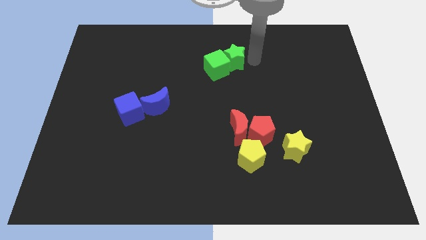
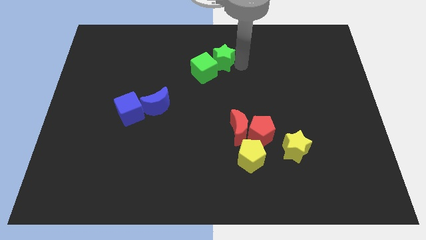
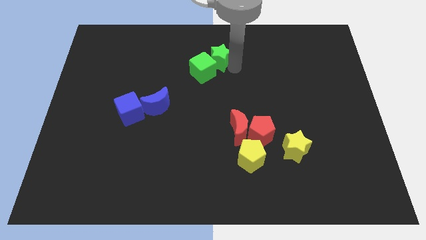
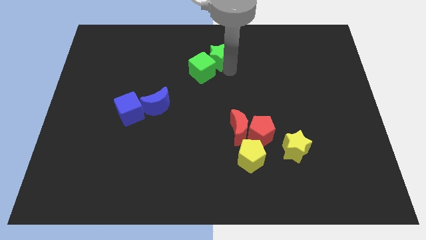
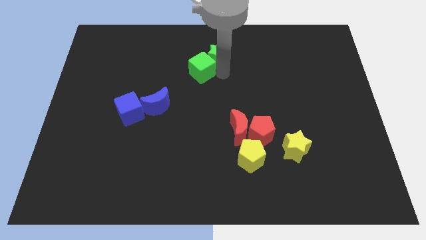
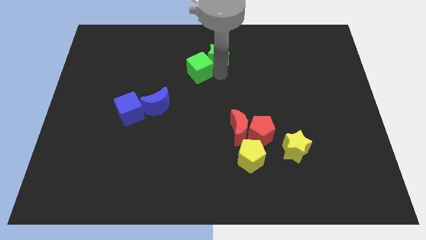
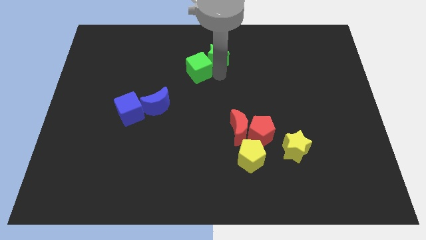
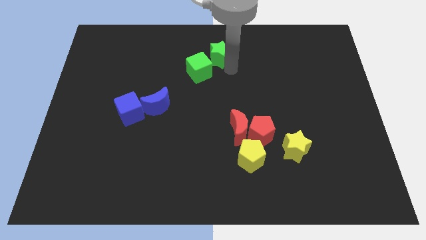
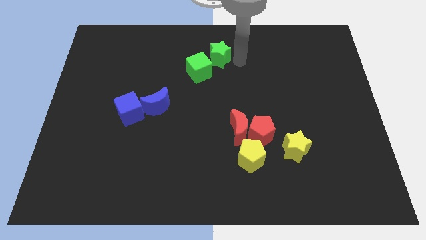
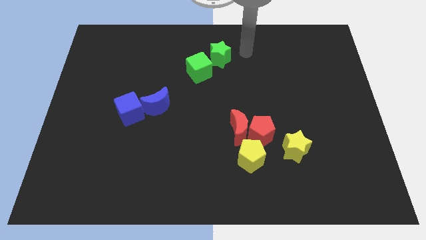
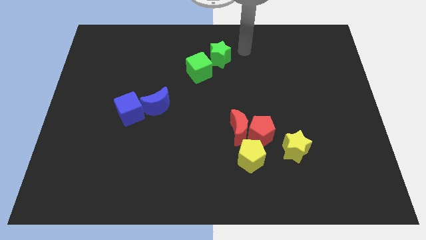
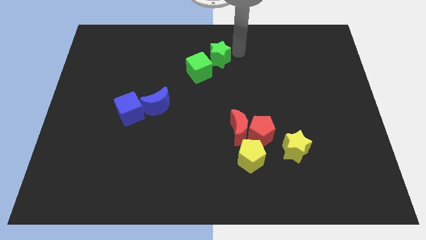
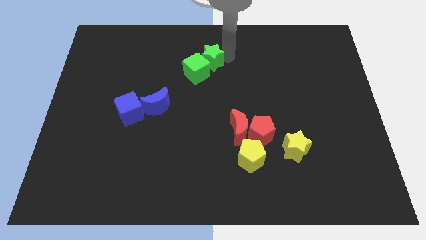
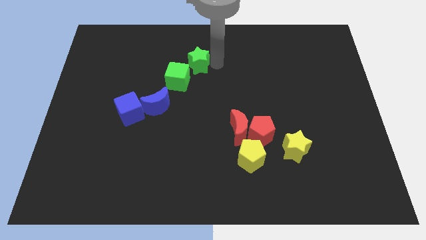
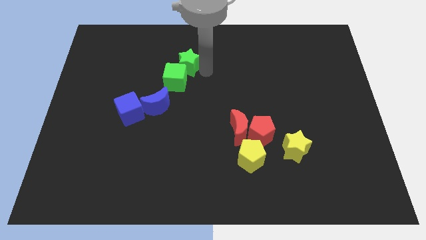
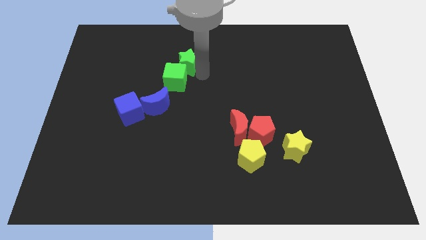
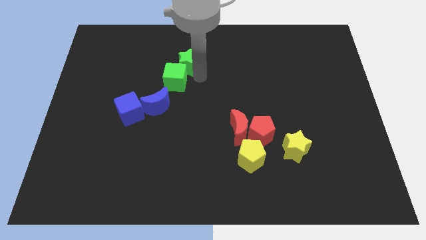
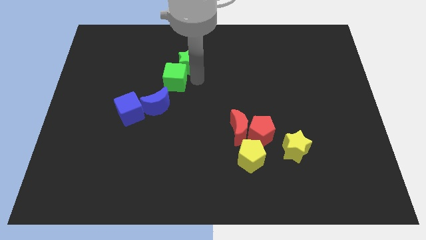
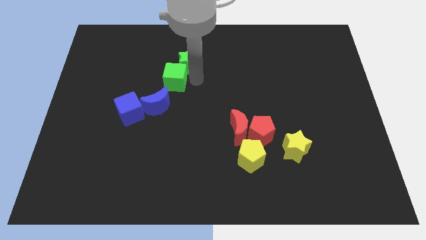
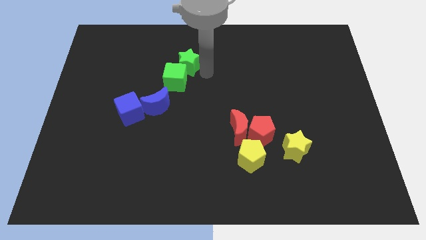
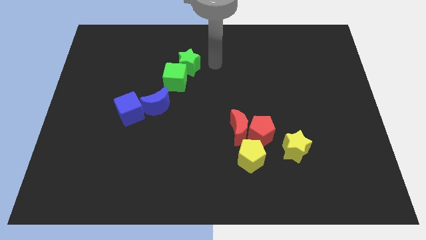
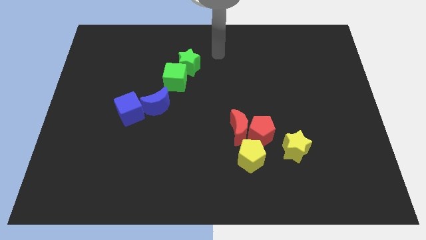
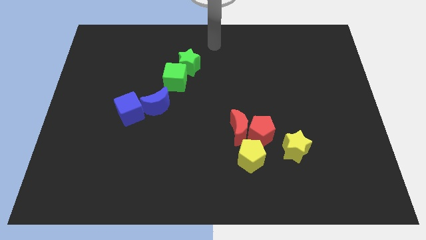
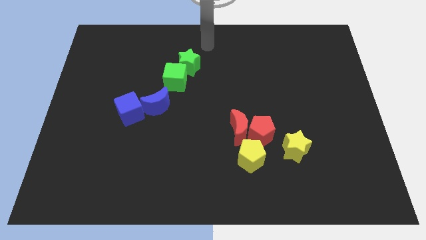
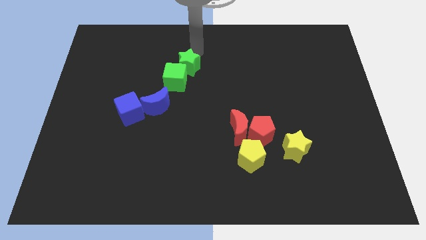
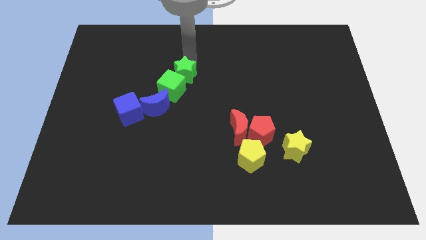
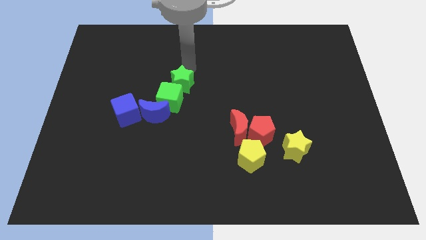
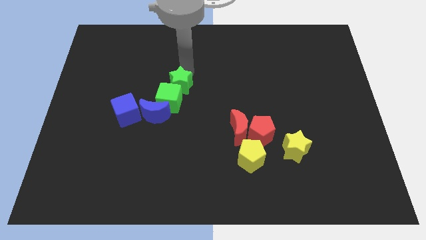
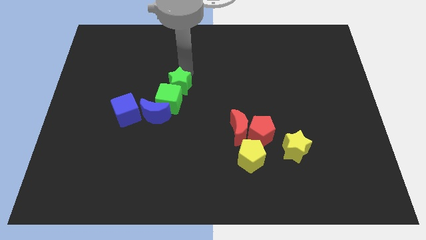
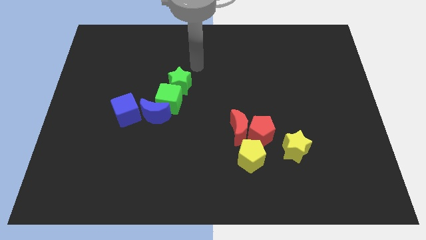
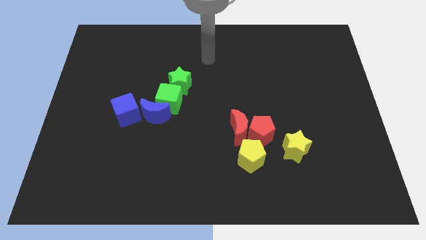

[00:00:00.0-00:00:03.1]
push the green blocks to the top of the blue crescent

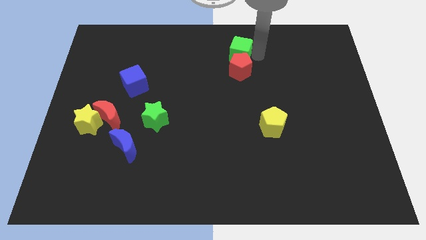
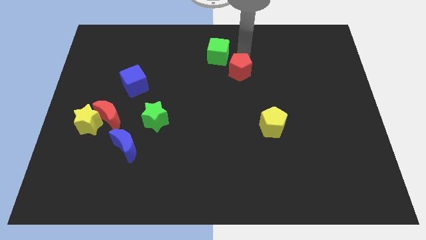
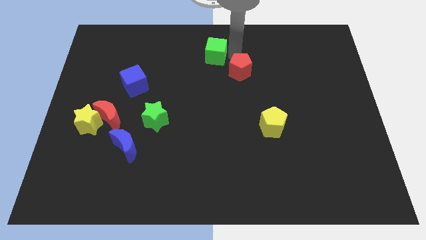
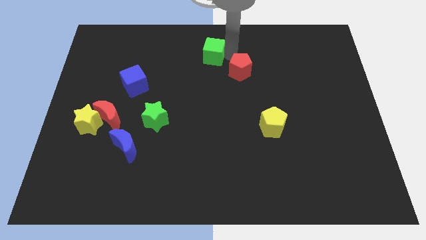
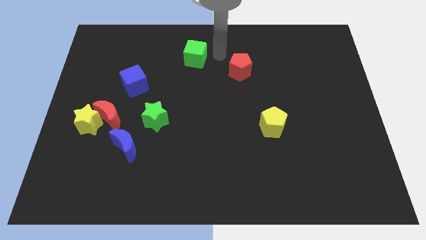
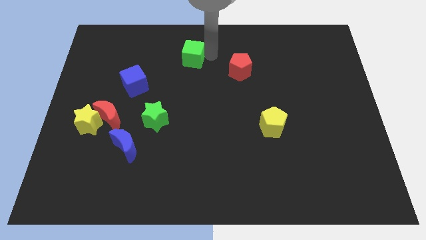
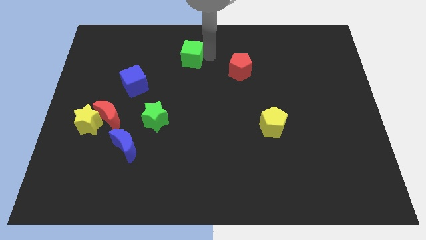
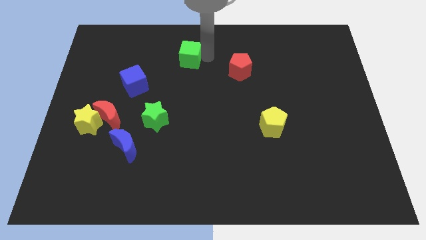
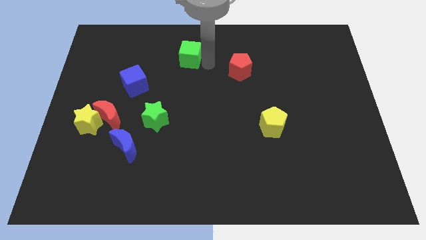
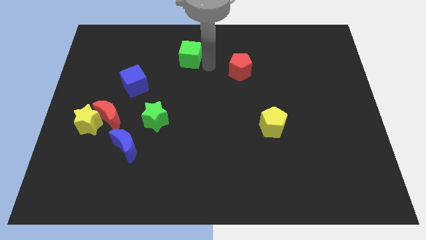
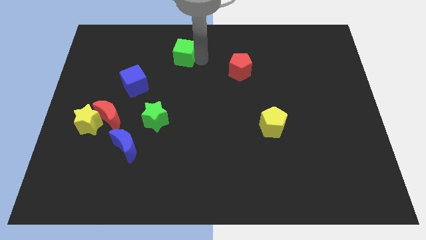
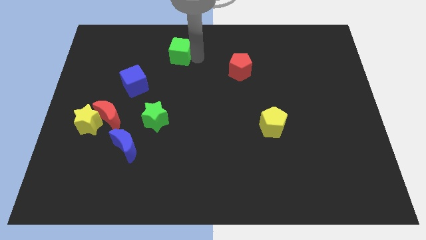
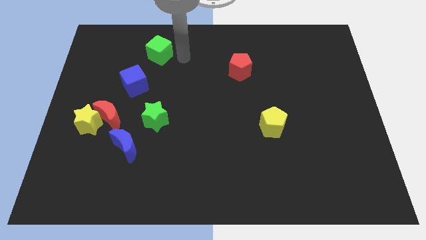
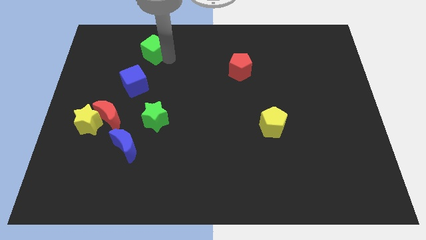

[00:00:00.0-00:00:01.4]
separate the green cube from red pentagon

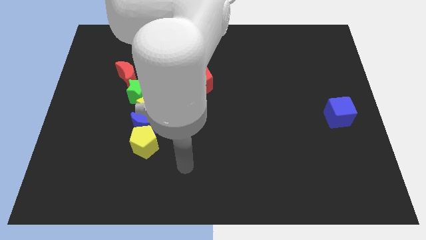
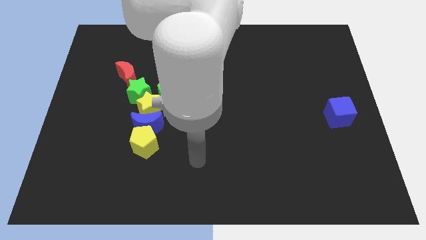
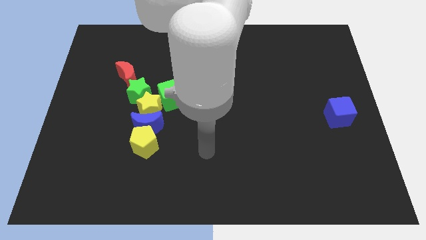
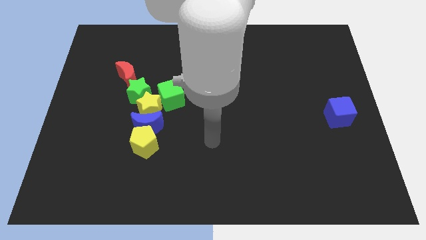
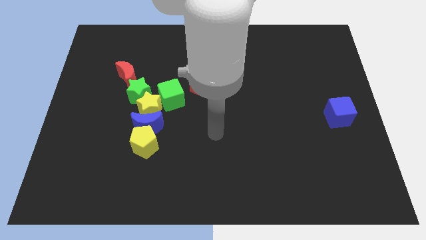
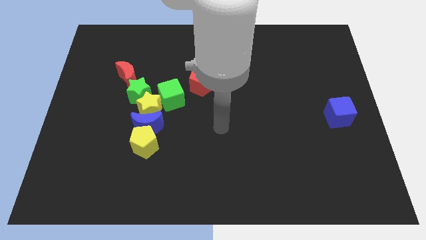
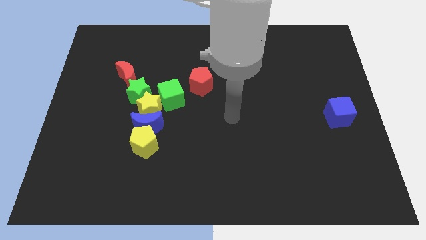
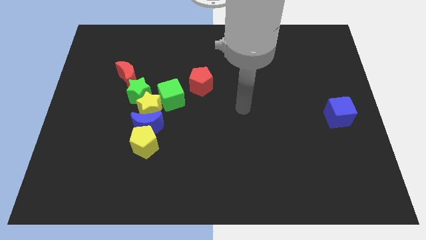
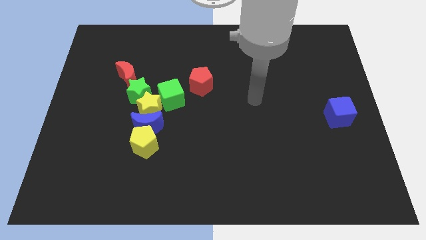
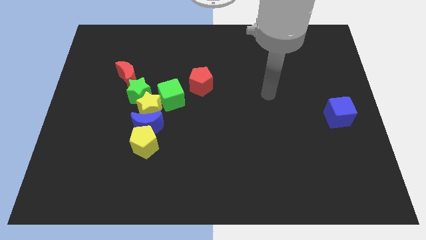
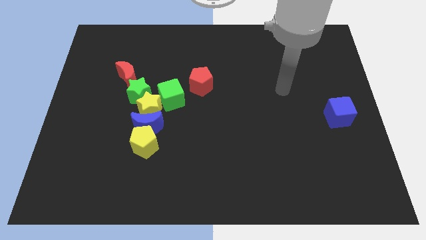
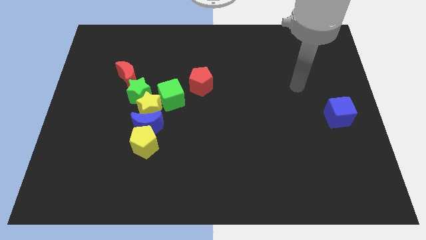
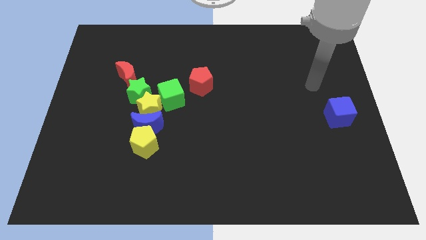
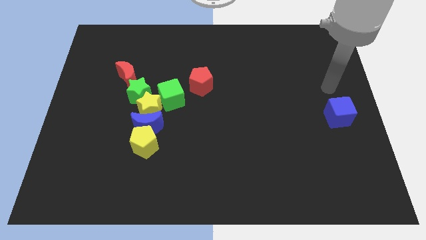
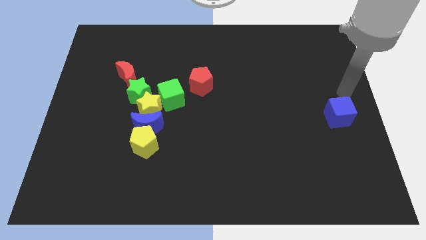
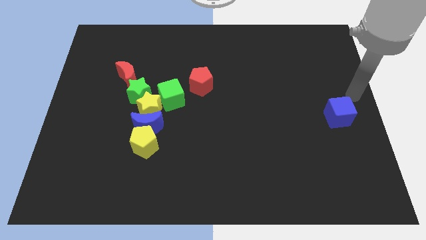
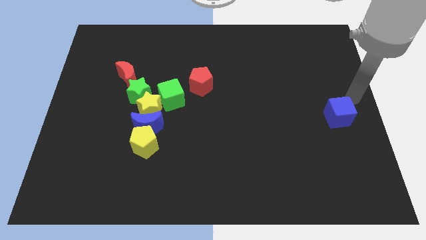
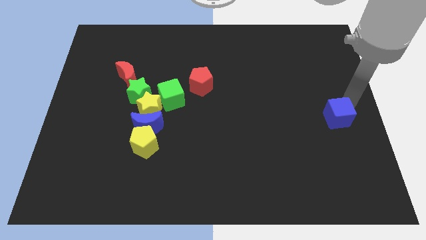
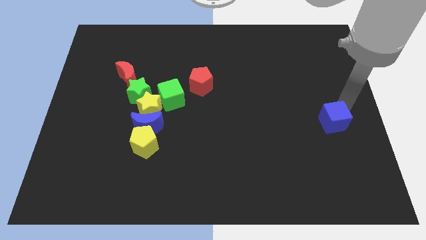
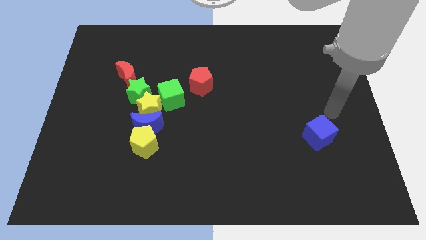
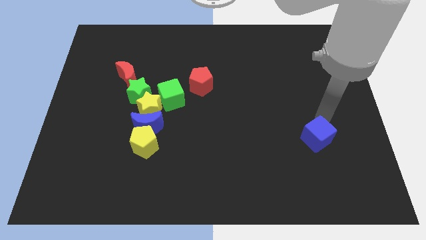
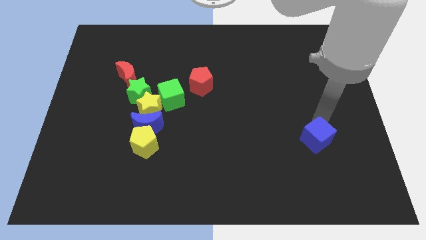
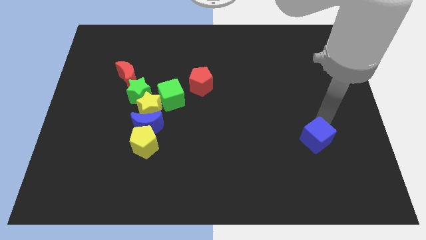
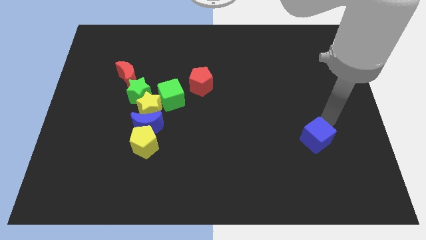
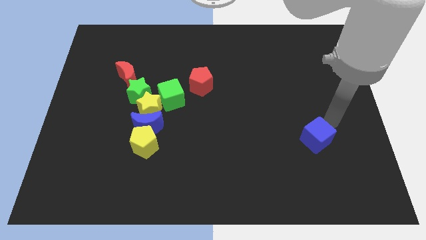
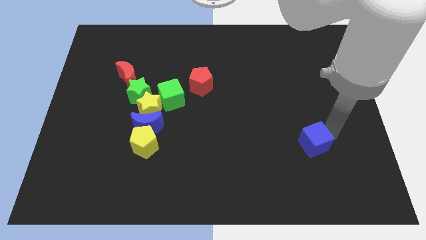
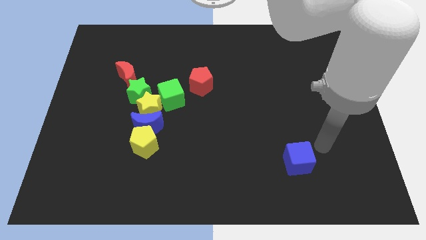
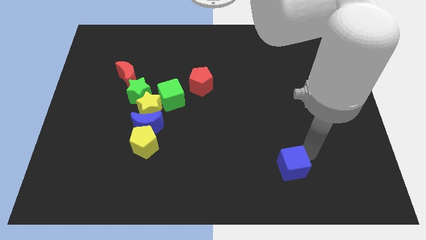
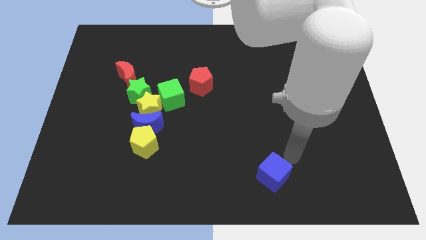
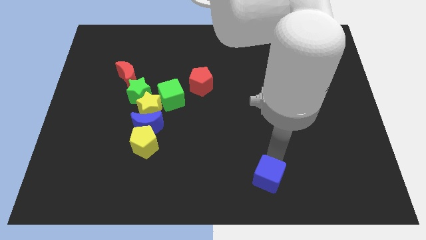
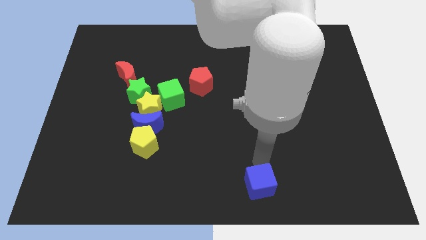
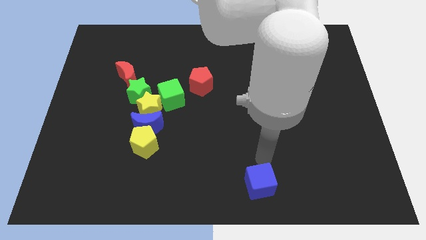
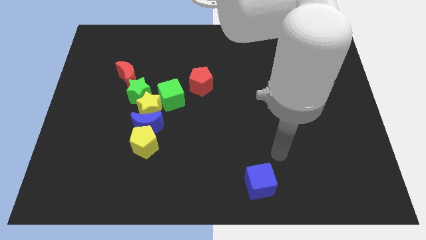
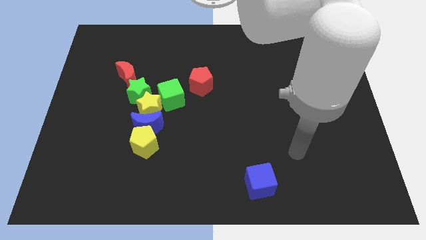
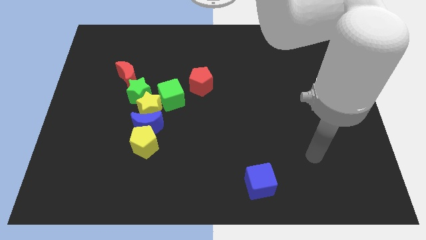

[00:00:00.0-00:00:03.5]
push the blue cube towards the bottom center of the board

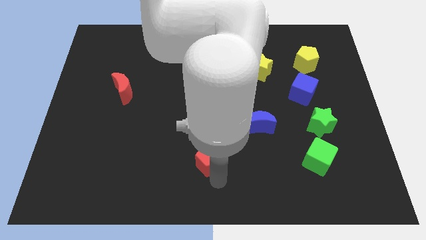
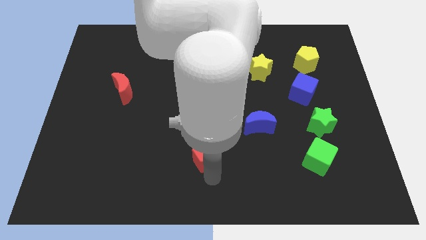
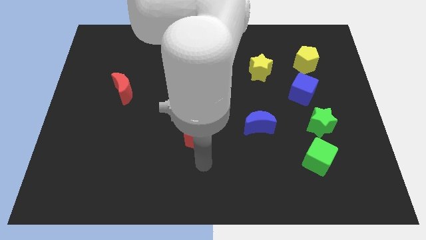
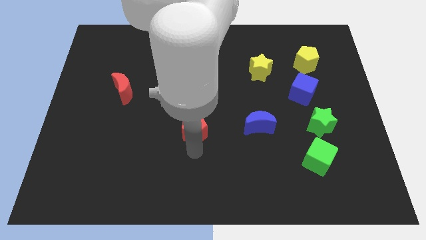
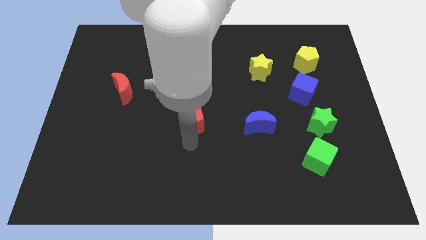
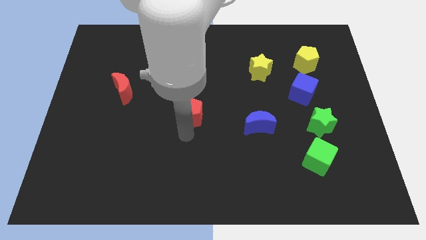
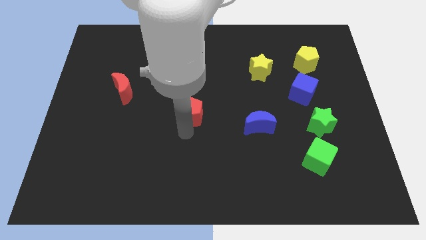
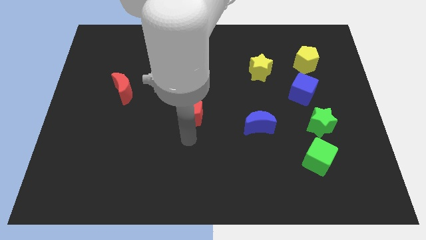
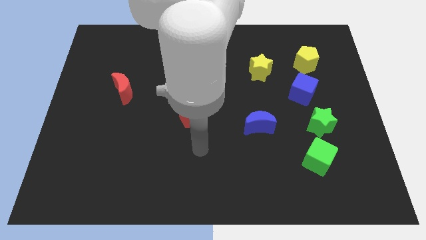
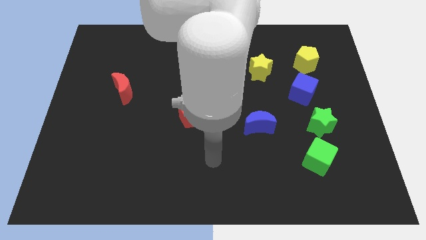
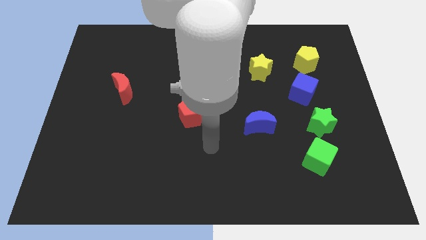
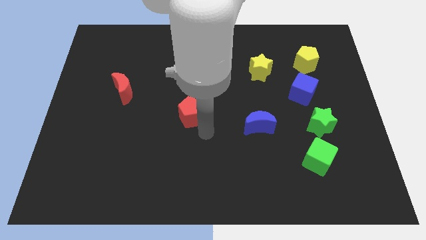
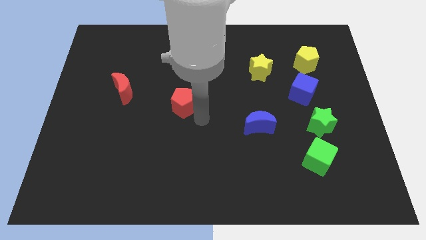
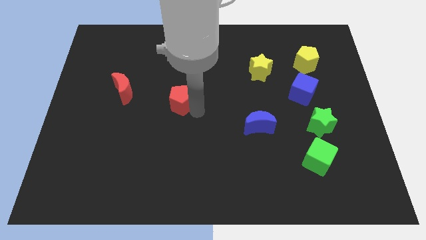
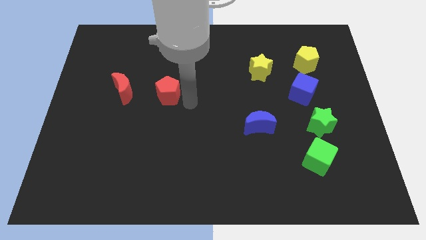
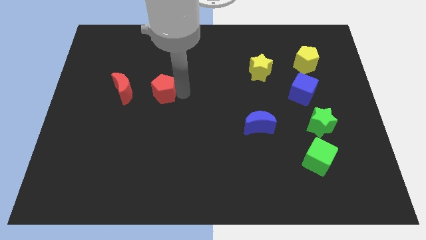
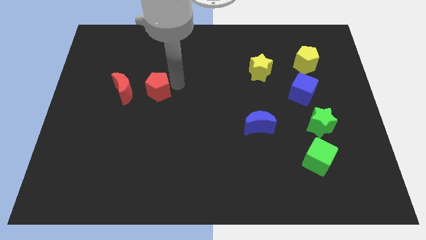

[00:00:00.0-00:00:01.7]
slide the red pentagon diagonally top left to the blue moon
